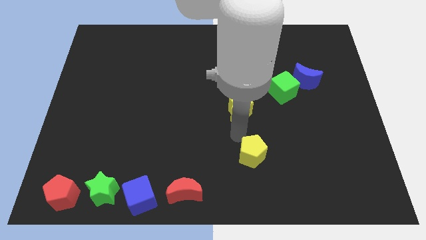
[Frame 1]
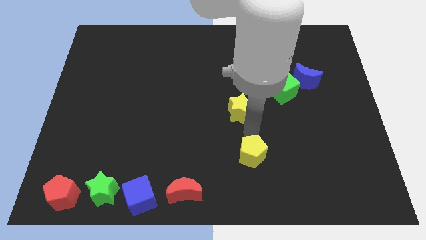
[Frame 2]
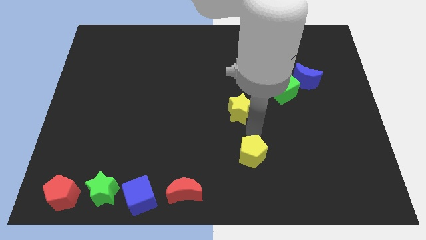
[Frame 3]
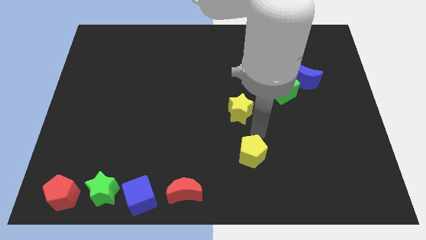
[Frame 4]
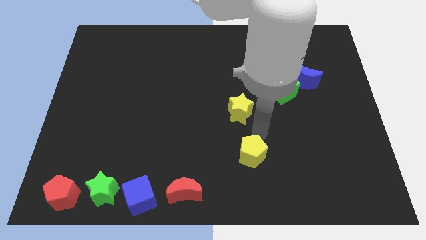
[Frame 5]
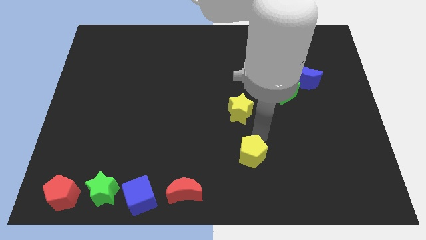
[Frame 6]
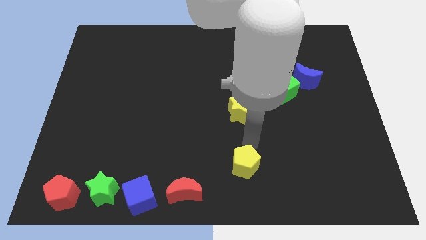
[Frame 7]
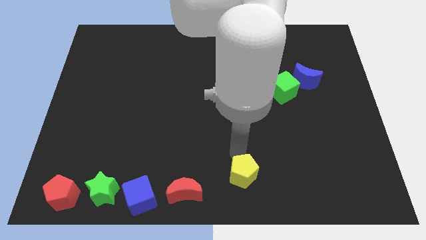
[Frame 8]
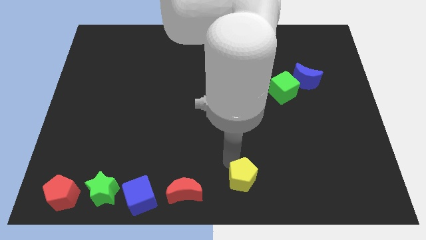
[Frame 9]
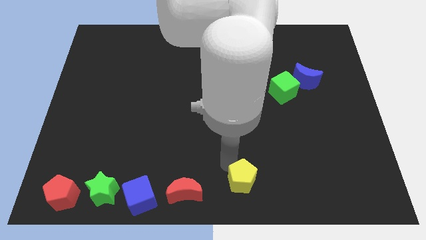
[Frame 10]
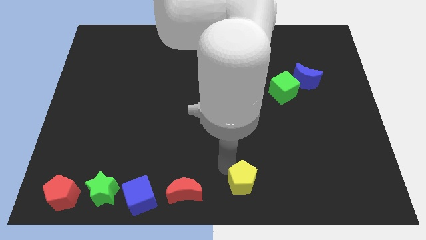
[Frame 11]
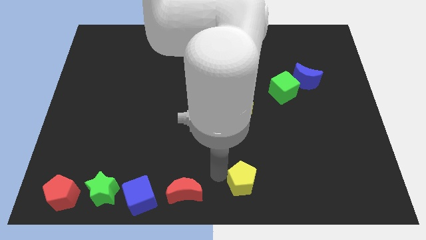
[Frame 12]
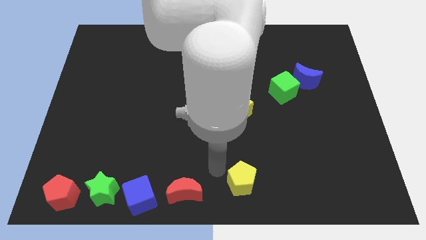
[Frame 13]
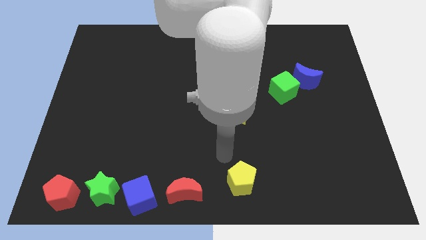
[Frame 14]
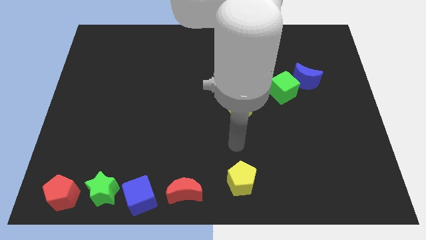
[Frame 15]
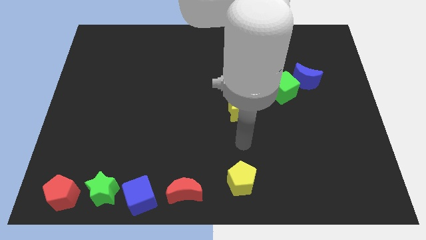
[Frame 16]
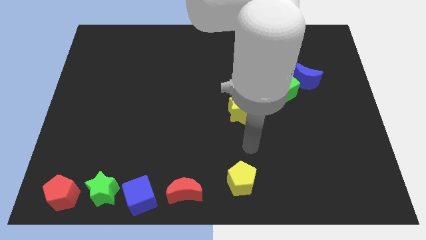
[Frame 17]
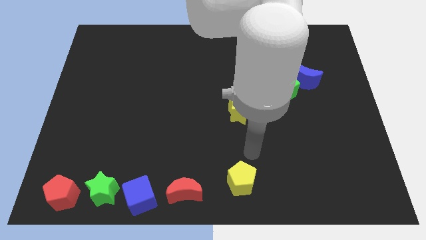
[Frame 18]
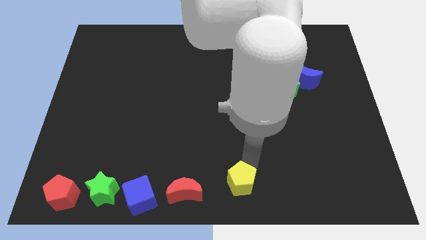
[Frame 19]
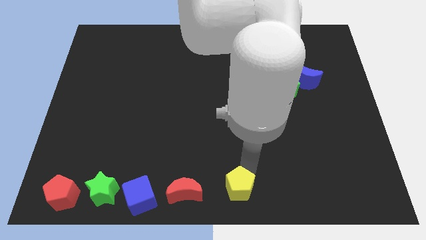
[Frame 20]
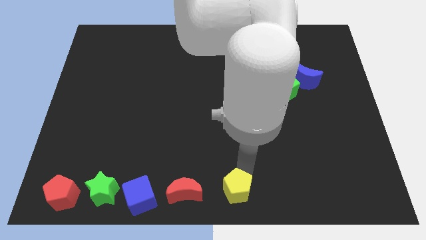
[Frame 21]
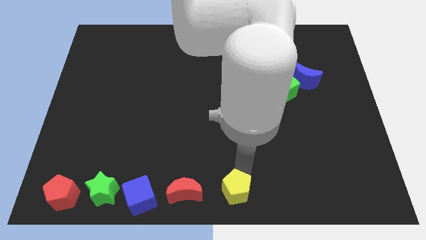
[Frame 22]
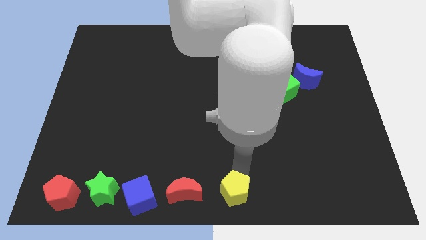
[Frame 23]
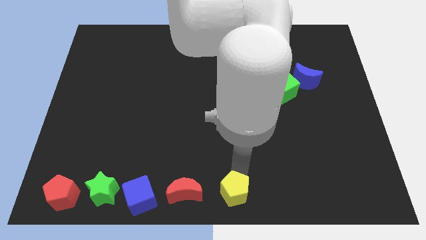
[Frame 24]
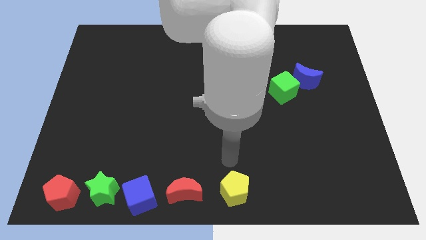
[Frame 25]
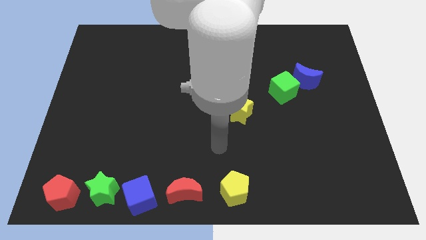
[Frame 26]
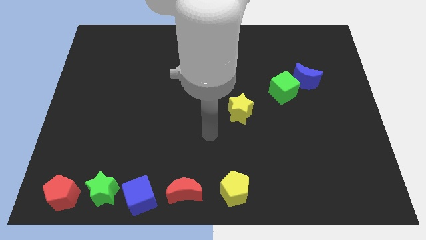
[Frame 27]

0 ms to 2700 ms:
move the yellow pentagon towards the bottom center of the board

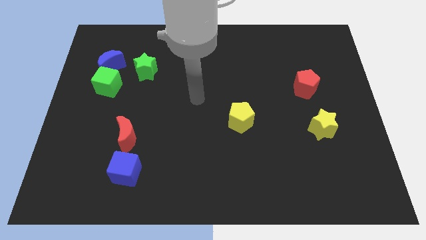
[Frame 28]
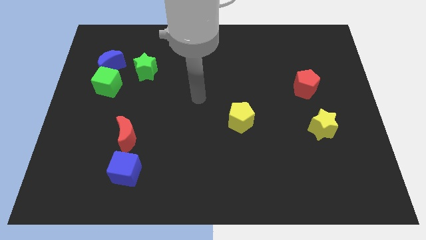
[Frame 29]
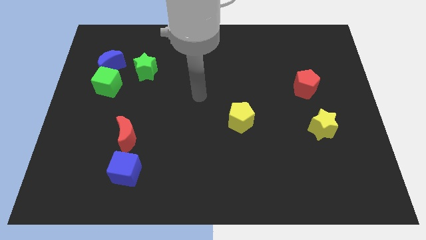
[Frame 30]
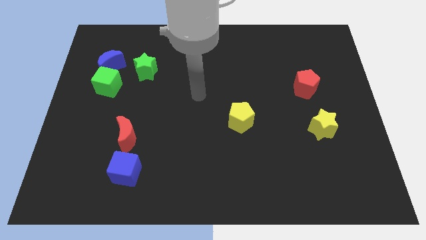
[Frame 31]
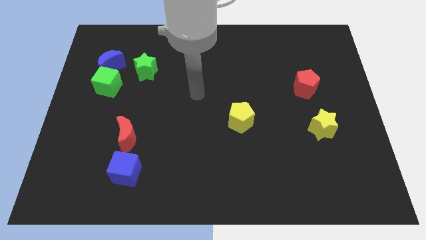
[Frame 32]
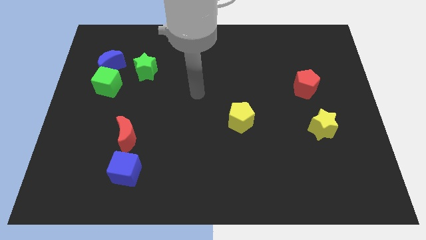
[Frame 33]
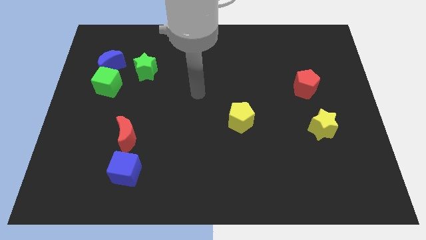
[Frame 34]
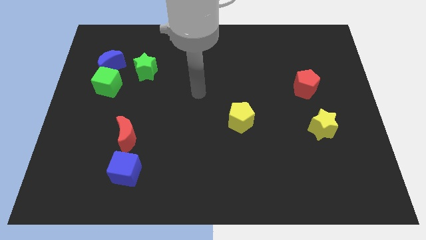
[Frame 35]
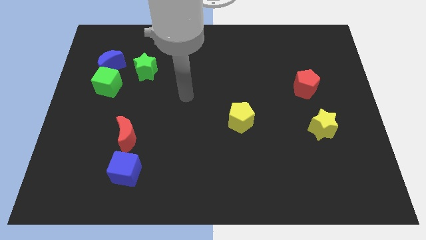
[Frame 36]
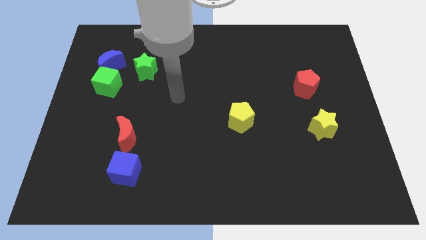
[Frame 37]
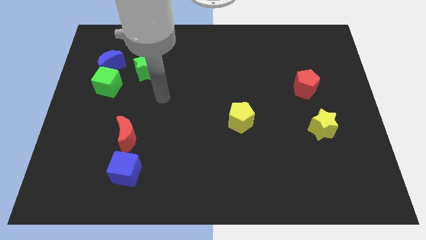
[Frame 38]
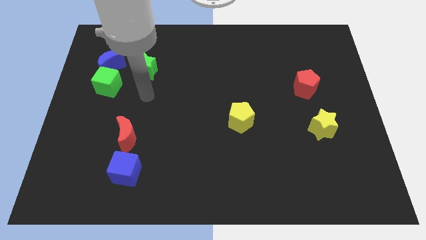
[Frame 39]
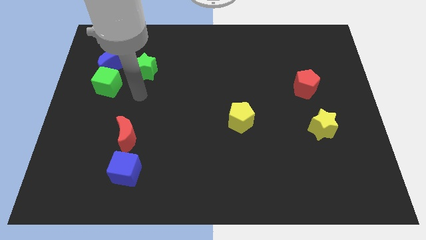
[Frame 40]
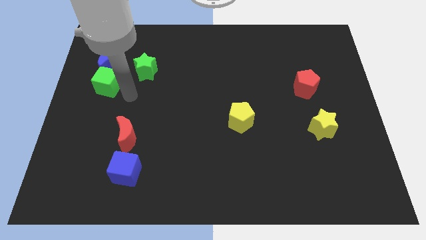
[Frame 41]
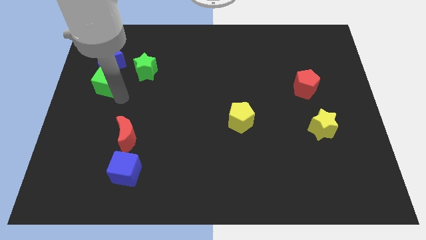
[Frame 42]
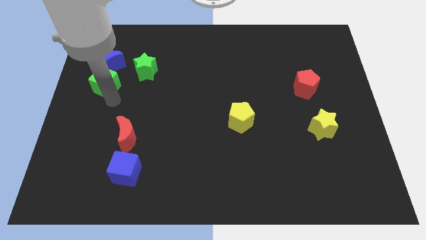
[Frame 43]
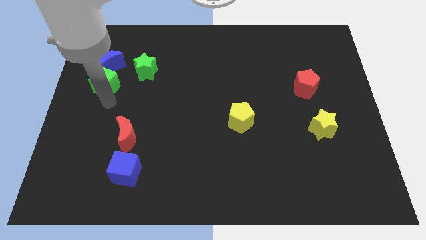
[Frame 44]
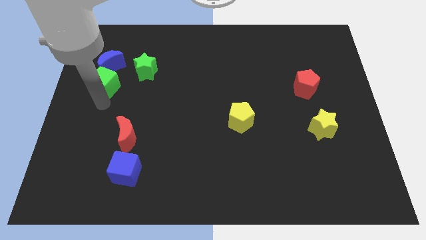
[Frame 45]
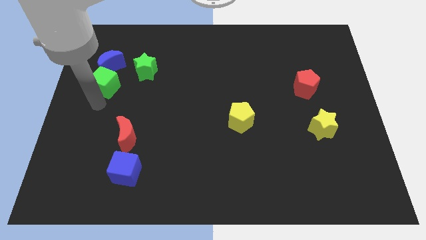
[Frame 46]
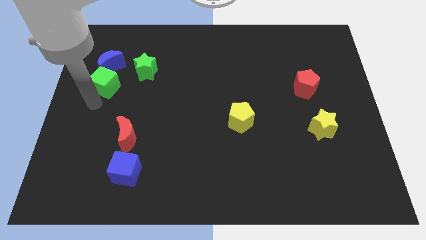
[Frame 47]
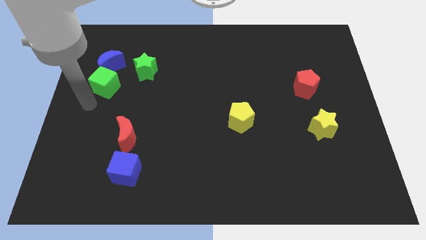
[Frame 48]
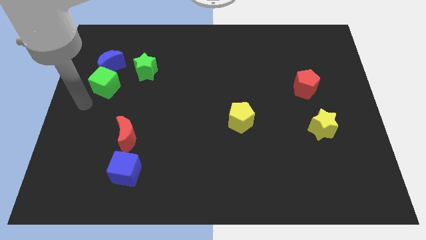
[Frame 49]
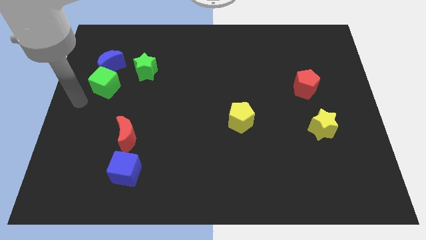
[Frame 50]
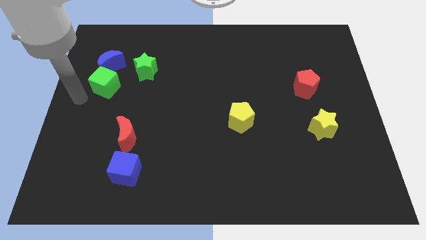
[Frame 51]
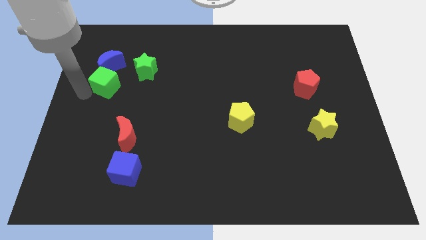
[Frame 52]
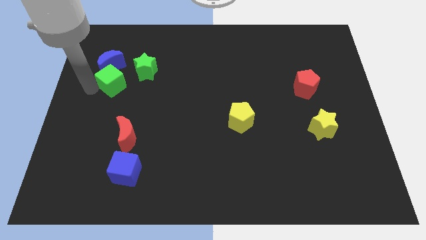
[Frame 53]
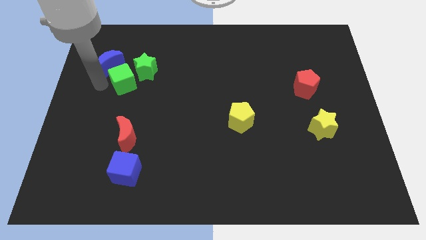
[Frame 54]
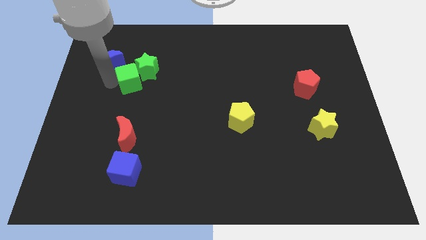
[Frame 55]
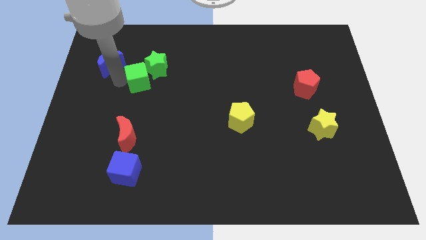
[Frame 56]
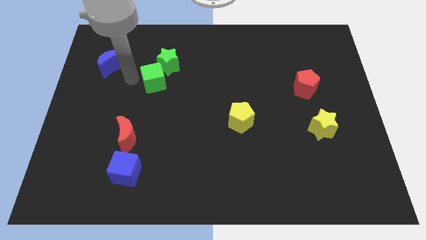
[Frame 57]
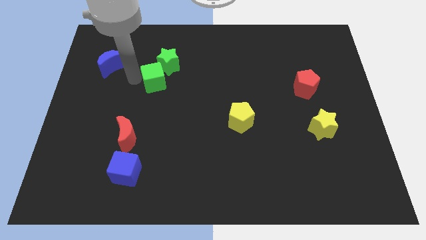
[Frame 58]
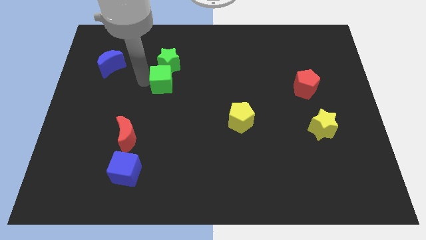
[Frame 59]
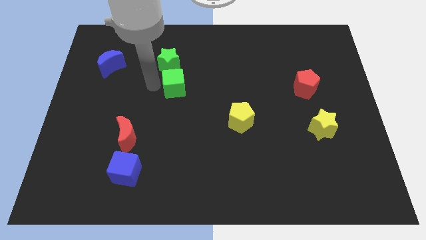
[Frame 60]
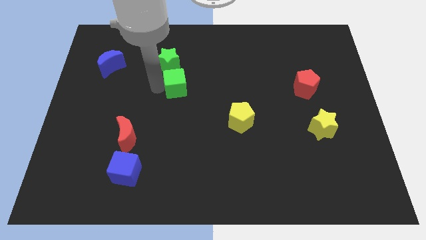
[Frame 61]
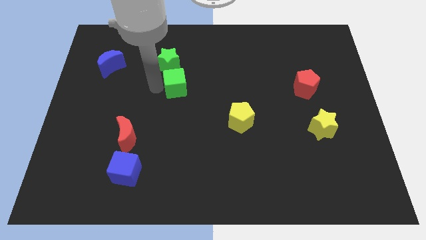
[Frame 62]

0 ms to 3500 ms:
place the green cube below the green star

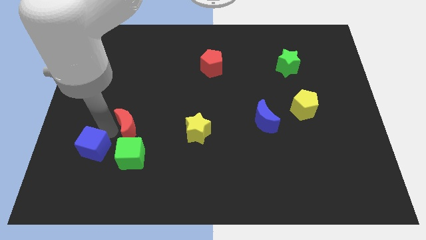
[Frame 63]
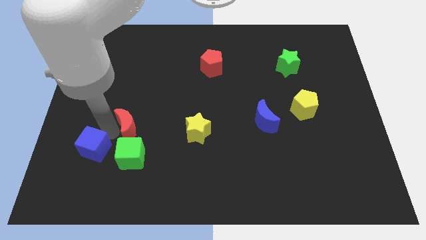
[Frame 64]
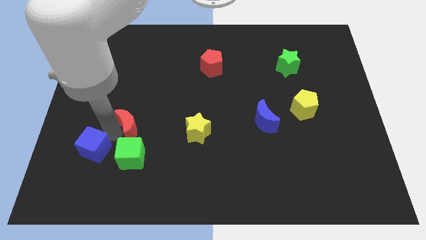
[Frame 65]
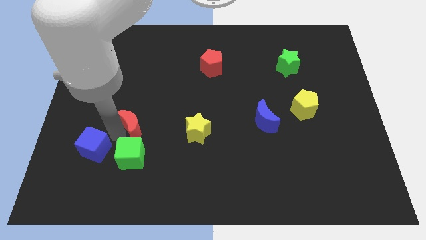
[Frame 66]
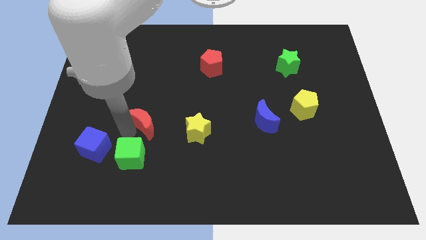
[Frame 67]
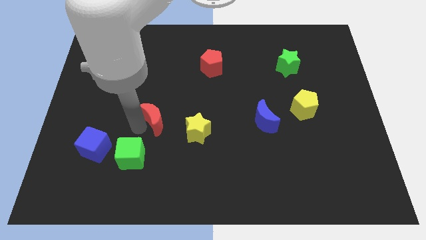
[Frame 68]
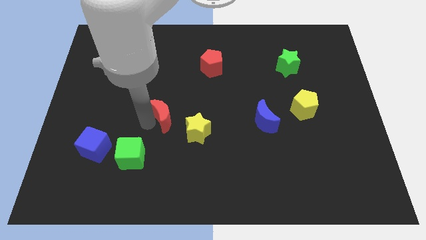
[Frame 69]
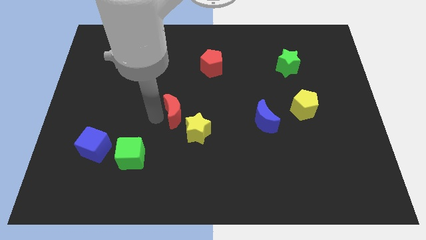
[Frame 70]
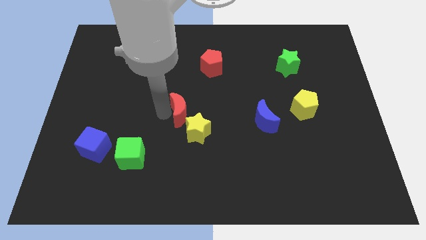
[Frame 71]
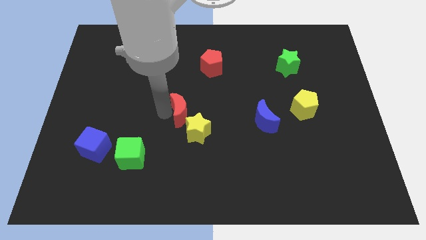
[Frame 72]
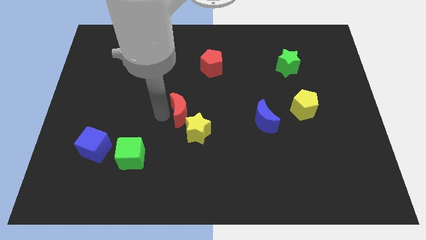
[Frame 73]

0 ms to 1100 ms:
move the red crescent away from the green cube

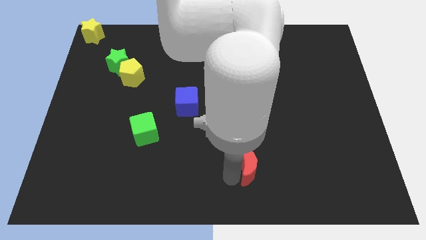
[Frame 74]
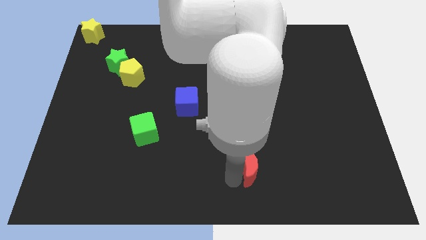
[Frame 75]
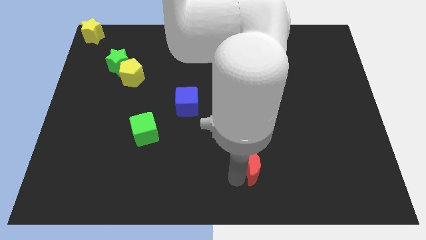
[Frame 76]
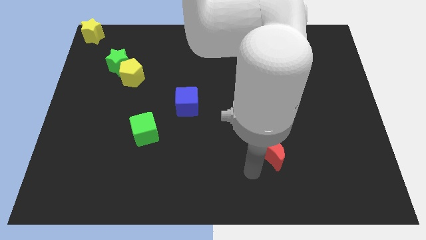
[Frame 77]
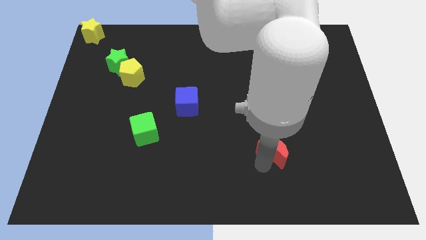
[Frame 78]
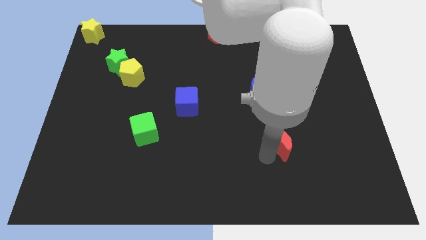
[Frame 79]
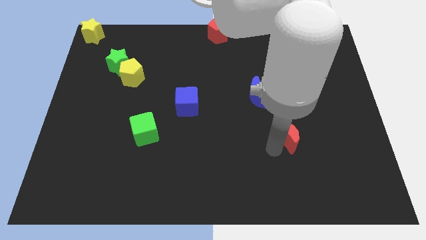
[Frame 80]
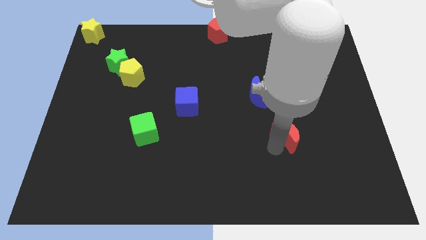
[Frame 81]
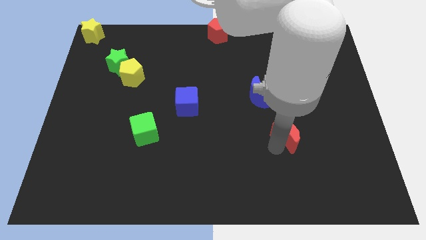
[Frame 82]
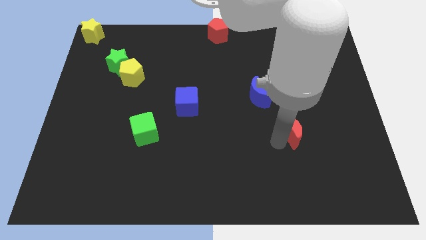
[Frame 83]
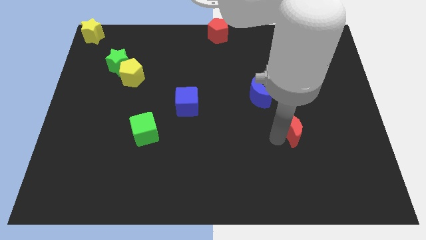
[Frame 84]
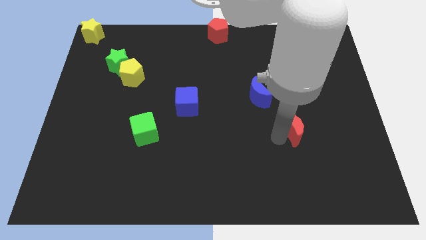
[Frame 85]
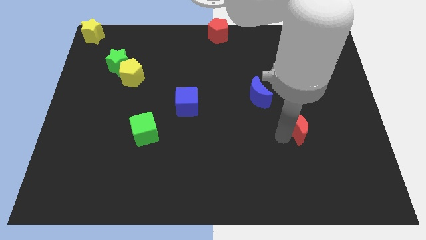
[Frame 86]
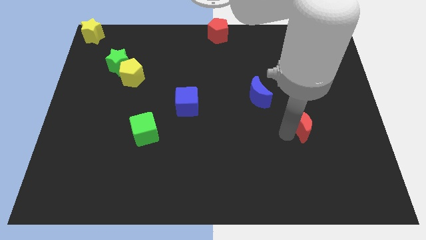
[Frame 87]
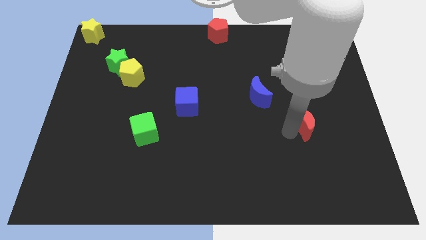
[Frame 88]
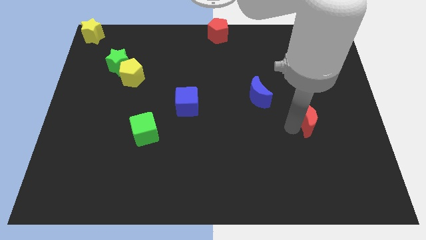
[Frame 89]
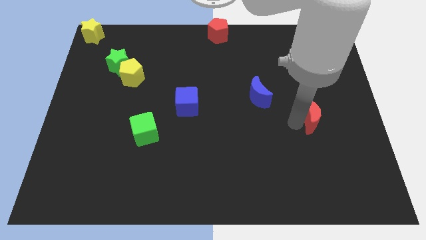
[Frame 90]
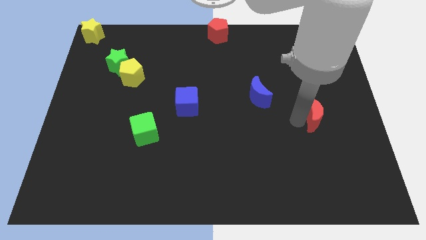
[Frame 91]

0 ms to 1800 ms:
move the red crescent towards the center left side of the board

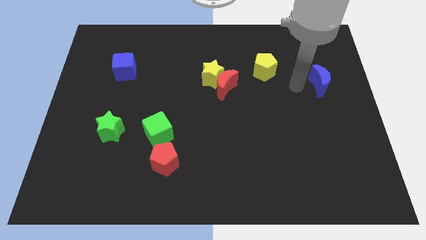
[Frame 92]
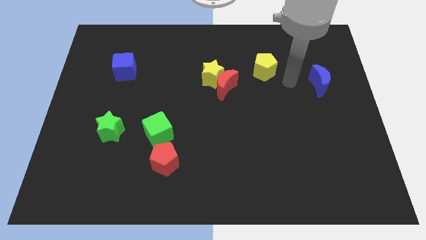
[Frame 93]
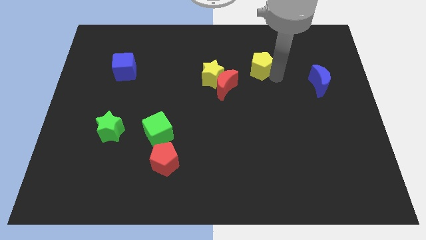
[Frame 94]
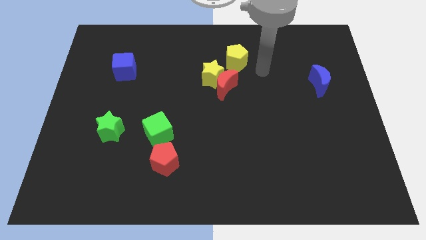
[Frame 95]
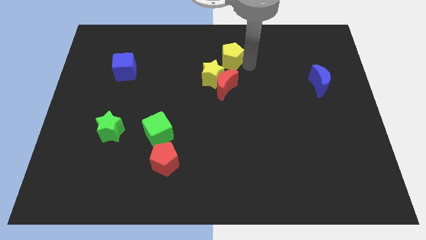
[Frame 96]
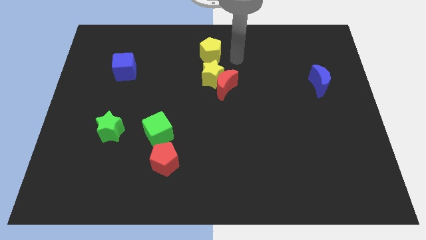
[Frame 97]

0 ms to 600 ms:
move the yellow pentagon to the yellow star
